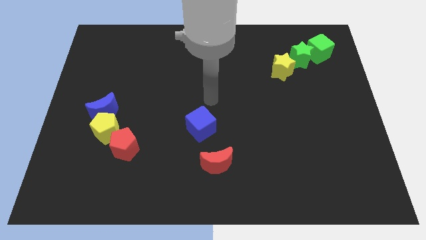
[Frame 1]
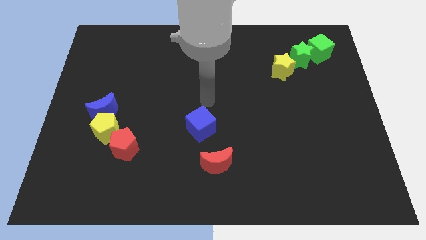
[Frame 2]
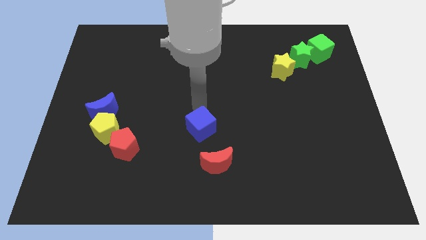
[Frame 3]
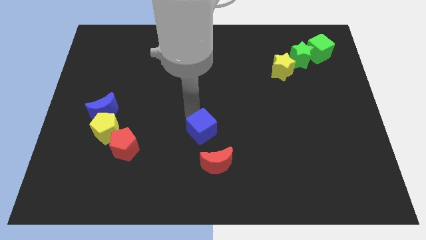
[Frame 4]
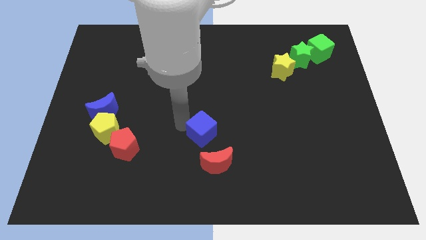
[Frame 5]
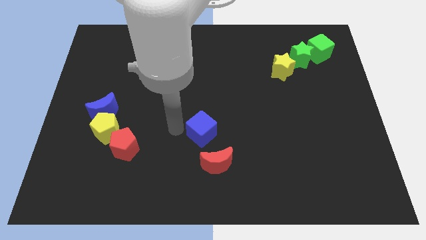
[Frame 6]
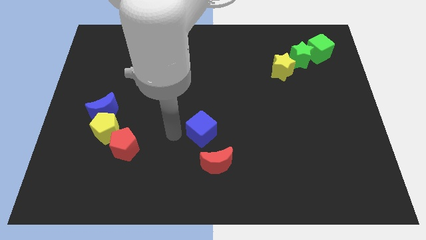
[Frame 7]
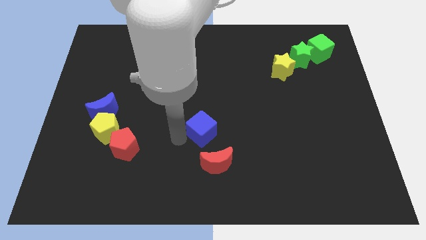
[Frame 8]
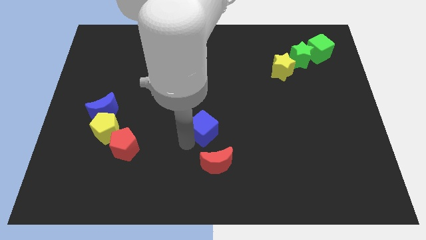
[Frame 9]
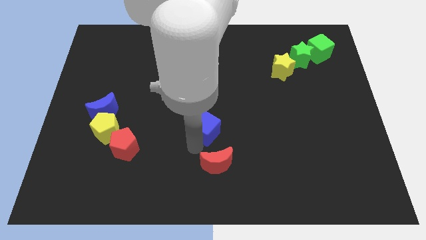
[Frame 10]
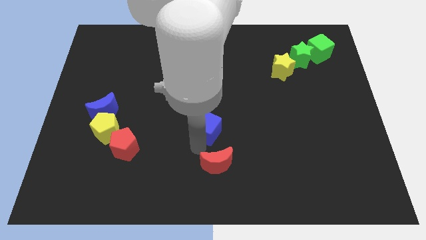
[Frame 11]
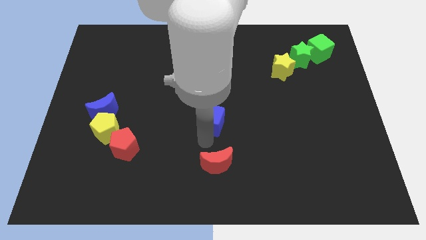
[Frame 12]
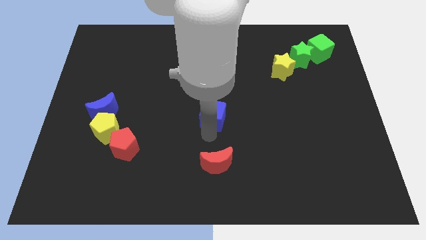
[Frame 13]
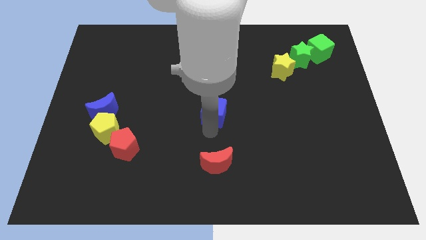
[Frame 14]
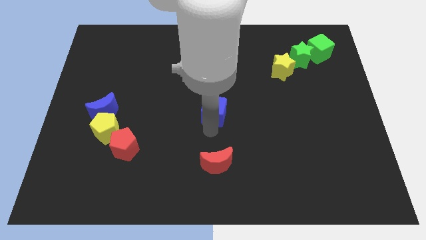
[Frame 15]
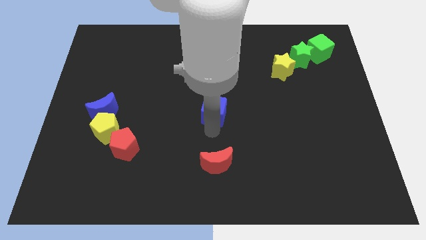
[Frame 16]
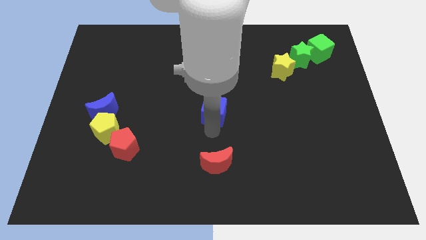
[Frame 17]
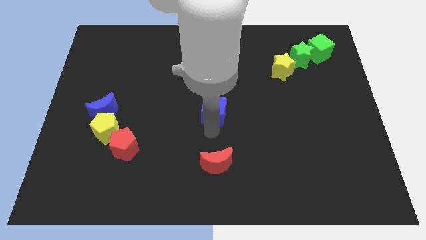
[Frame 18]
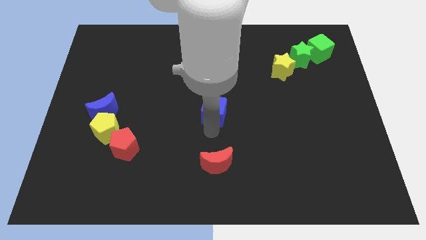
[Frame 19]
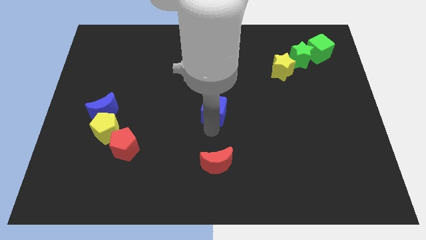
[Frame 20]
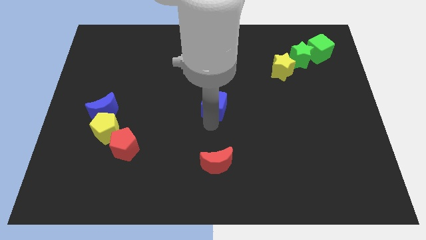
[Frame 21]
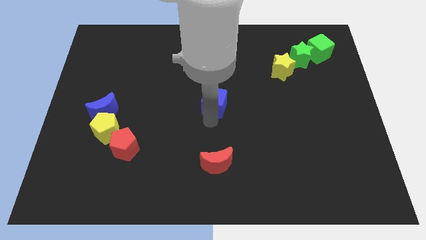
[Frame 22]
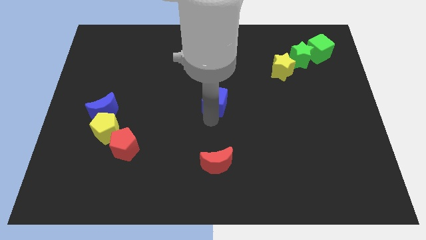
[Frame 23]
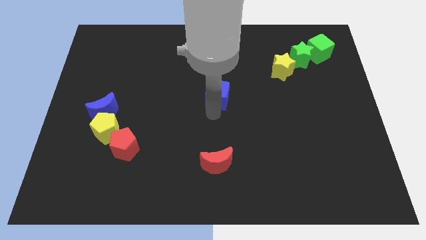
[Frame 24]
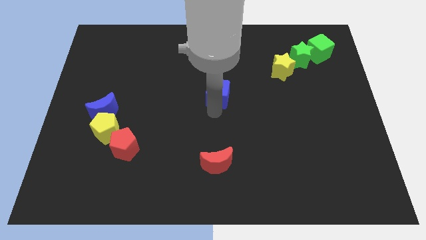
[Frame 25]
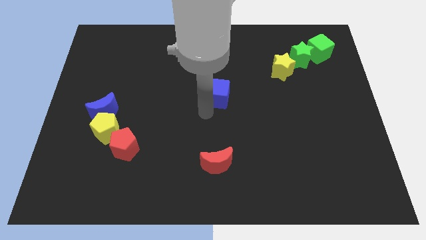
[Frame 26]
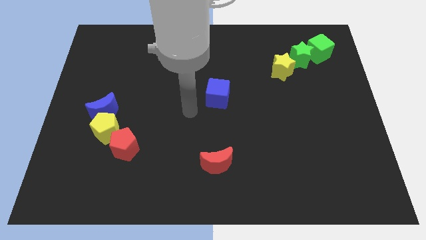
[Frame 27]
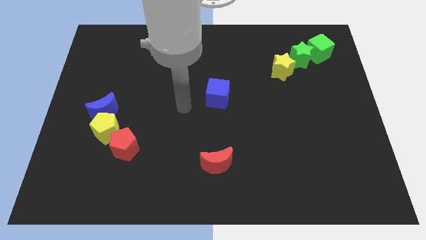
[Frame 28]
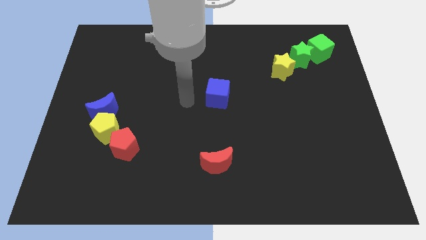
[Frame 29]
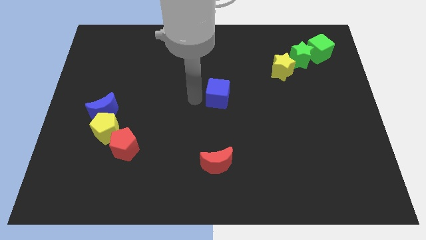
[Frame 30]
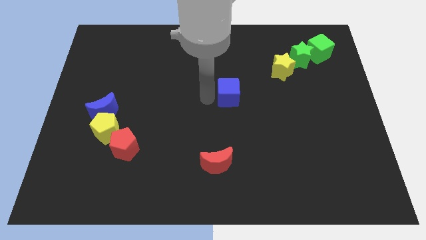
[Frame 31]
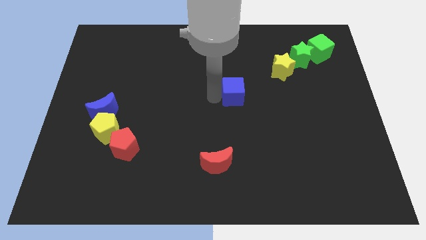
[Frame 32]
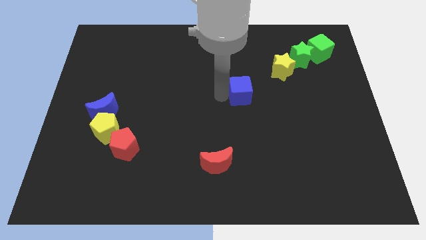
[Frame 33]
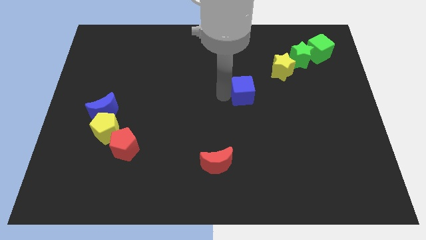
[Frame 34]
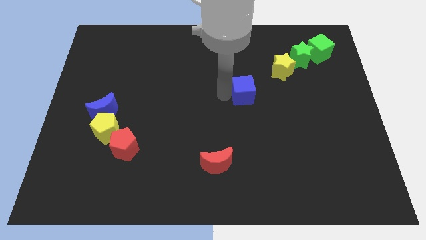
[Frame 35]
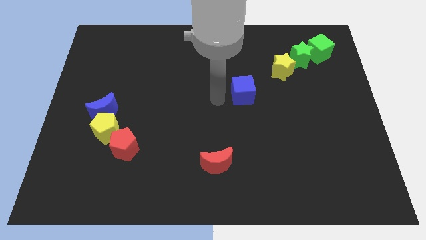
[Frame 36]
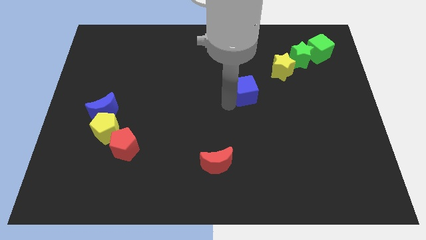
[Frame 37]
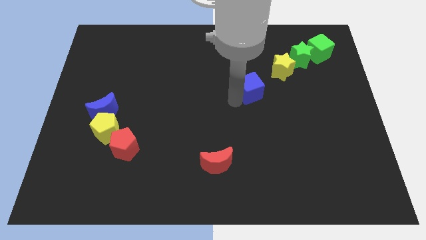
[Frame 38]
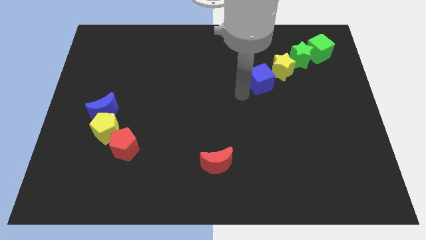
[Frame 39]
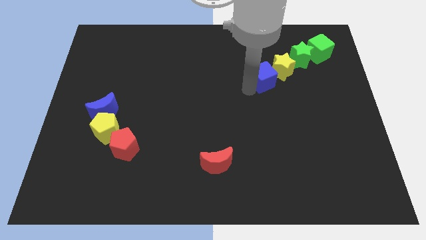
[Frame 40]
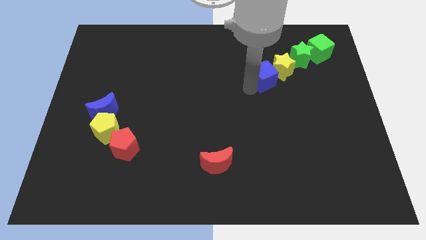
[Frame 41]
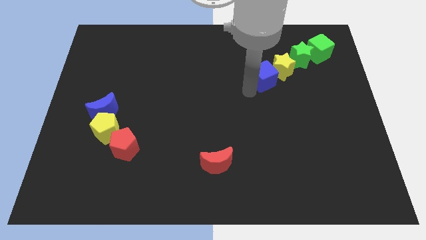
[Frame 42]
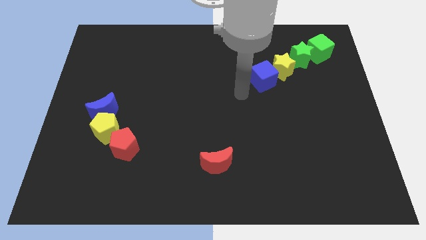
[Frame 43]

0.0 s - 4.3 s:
place the blue cube close to the yellow star

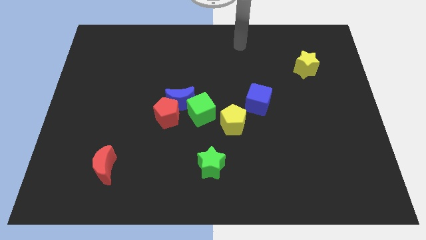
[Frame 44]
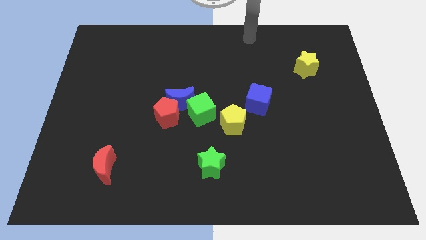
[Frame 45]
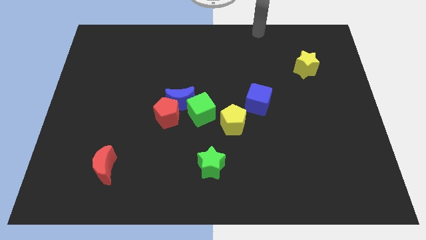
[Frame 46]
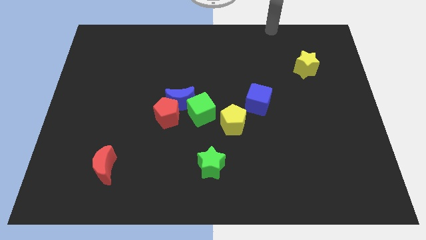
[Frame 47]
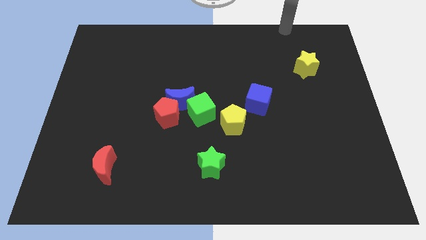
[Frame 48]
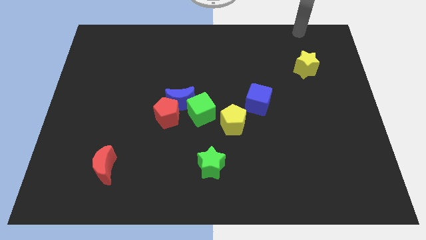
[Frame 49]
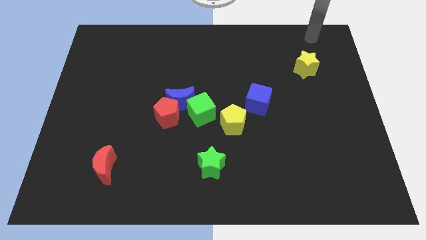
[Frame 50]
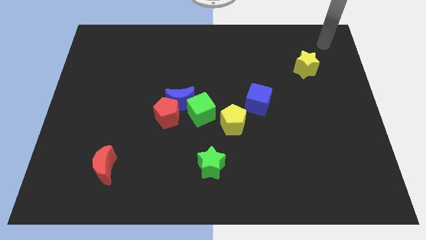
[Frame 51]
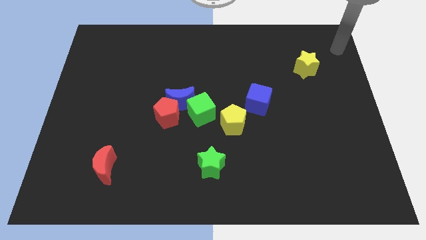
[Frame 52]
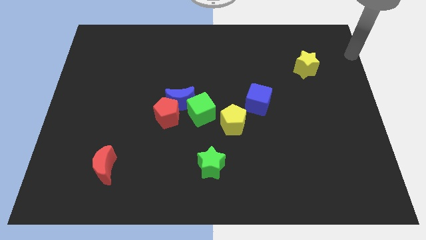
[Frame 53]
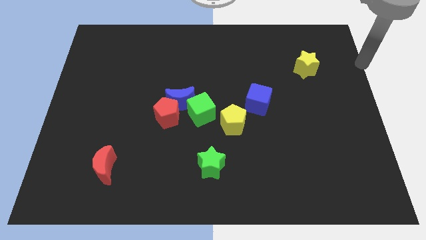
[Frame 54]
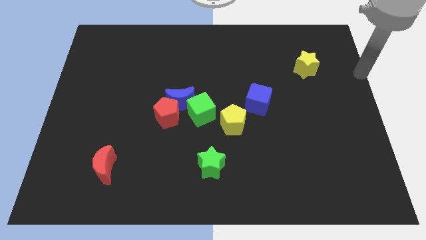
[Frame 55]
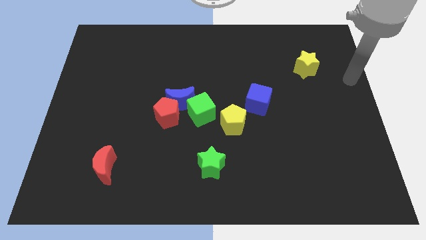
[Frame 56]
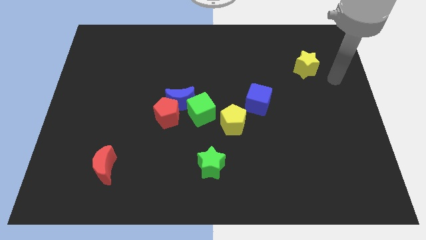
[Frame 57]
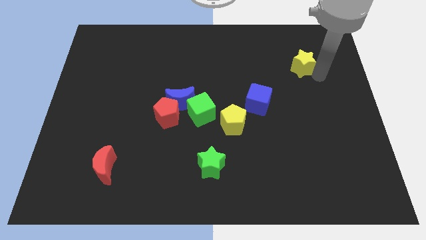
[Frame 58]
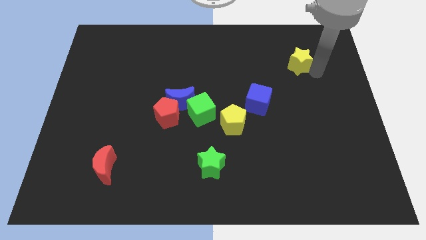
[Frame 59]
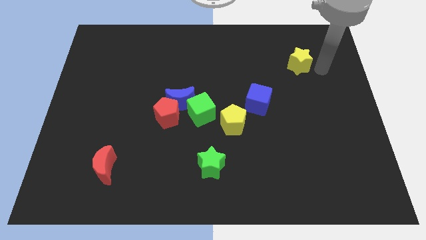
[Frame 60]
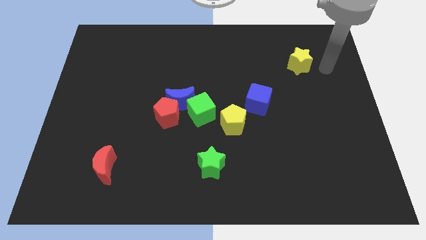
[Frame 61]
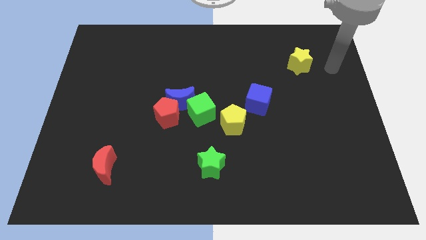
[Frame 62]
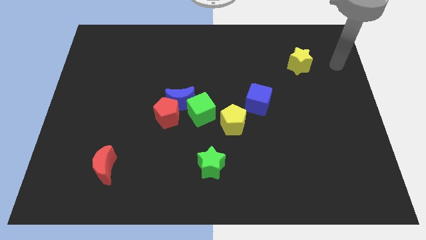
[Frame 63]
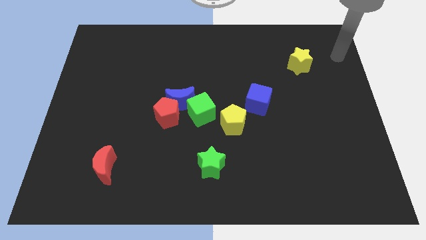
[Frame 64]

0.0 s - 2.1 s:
point the arm to the right of the yellow star

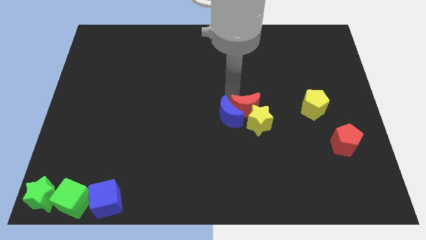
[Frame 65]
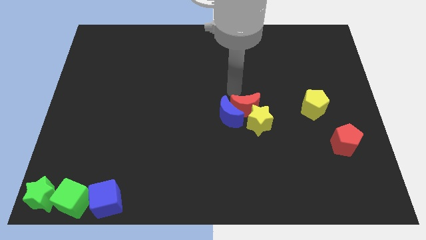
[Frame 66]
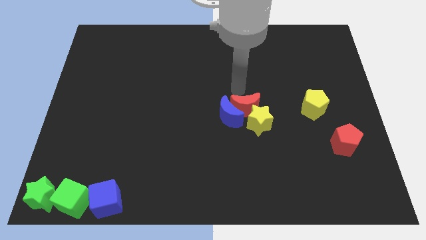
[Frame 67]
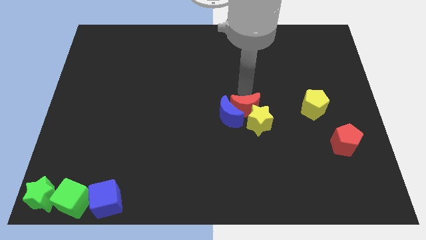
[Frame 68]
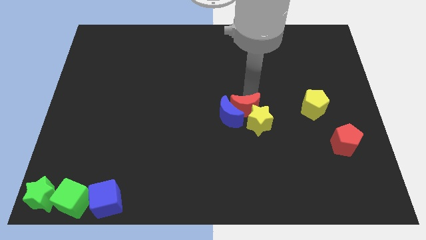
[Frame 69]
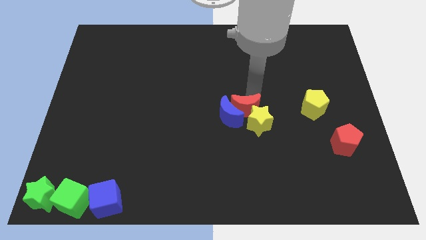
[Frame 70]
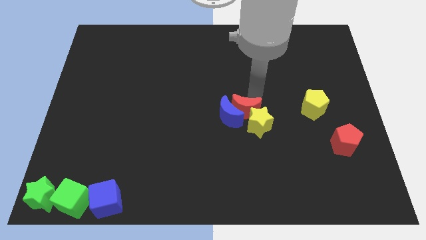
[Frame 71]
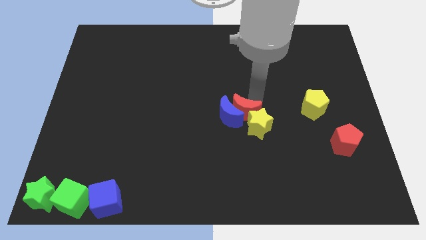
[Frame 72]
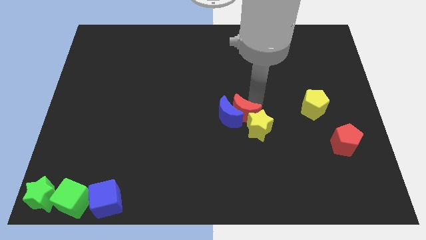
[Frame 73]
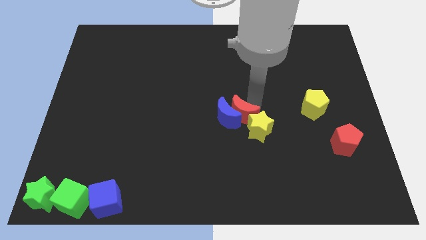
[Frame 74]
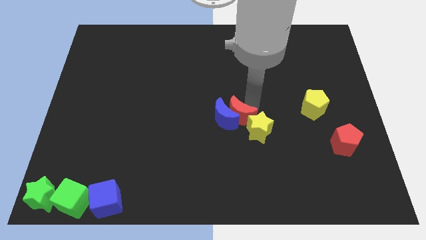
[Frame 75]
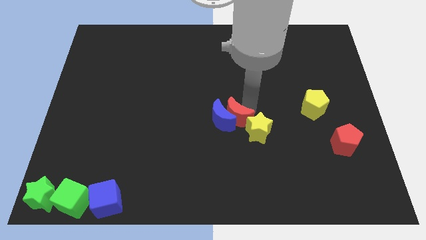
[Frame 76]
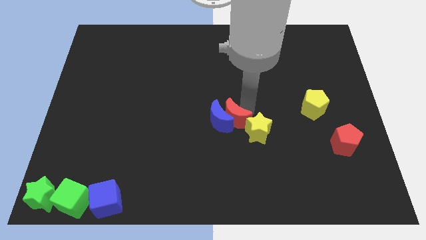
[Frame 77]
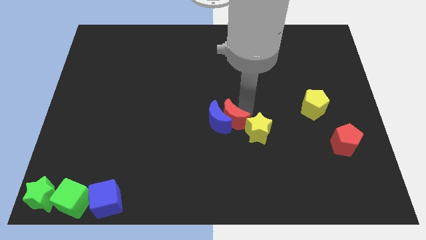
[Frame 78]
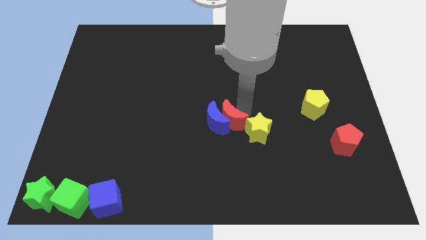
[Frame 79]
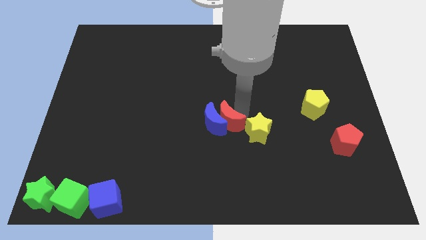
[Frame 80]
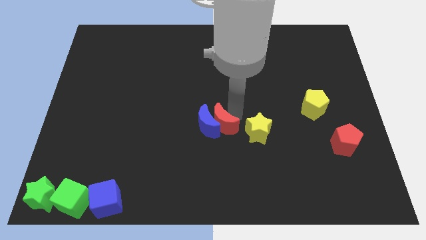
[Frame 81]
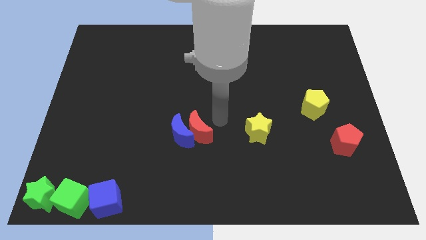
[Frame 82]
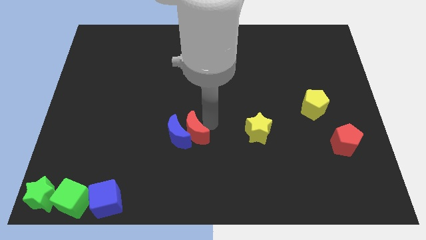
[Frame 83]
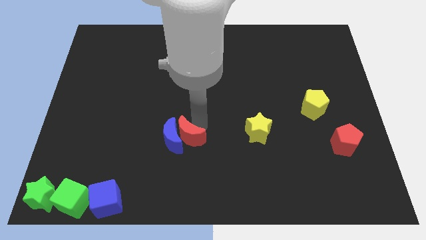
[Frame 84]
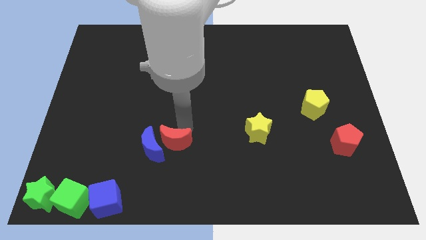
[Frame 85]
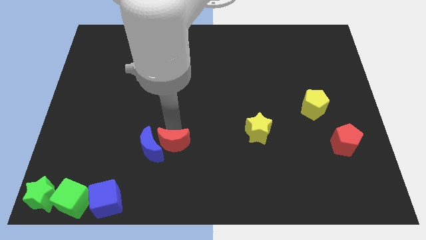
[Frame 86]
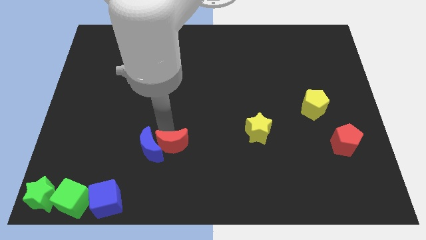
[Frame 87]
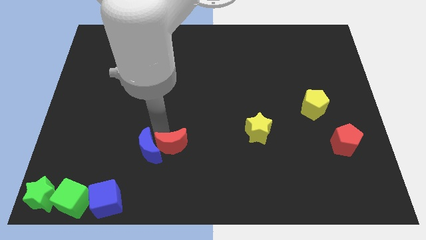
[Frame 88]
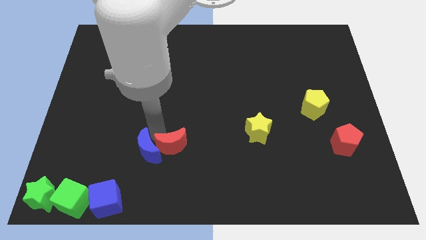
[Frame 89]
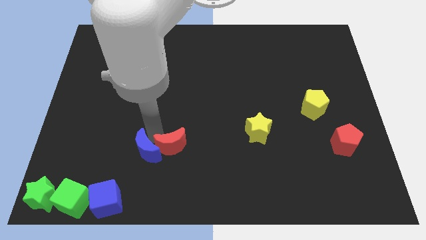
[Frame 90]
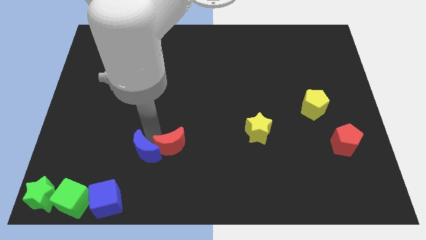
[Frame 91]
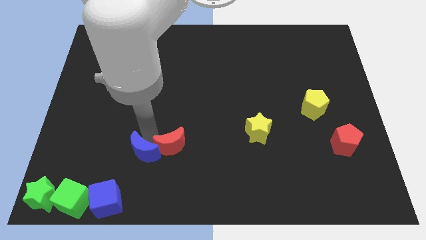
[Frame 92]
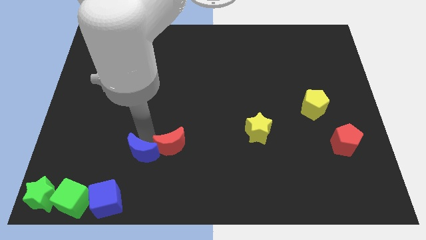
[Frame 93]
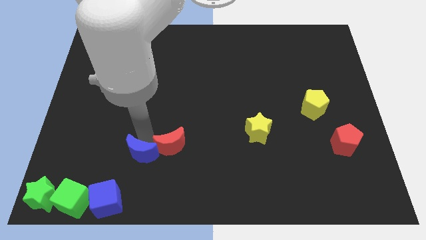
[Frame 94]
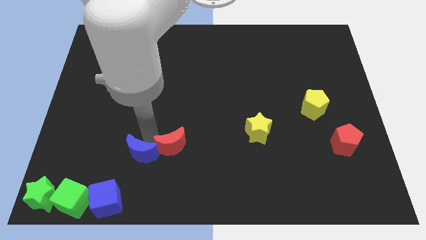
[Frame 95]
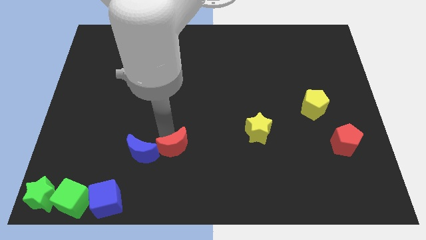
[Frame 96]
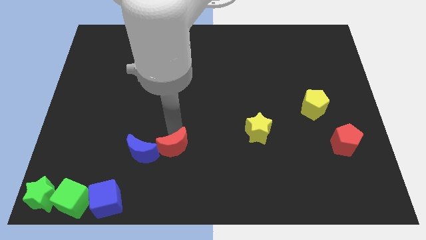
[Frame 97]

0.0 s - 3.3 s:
slide the red moon and blue crescent to the left side
